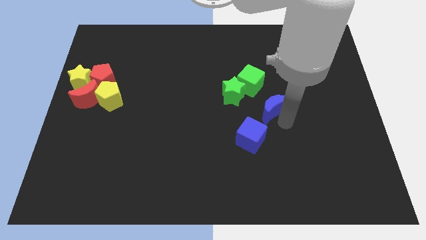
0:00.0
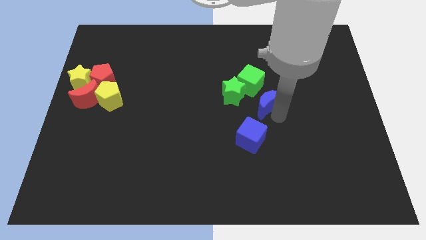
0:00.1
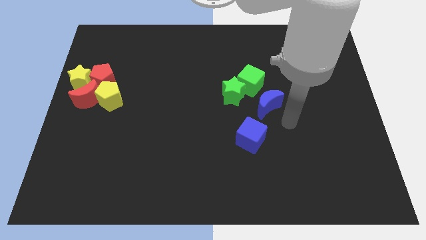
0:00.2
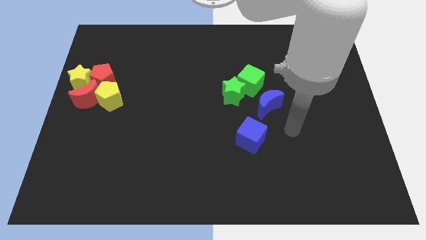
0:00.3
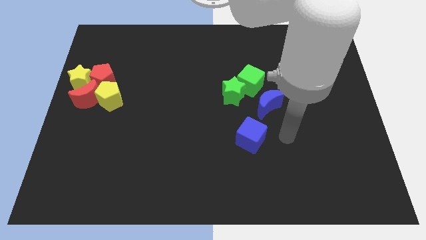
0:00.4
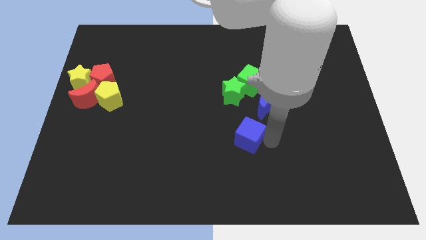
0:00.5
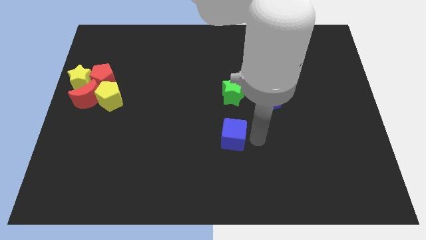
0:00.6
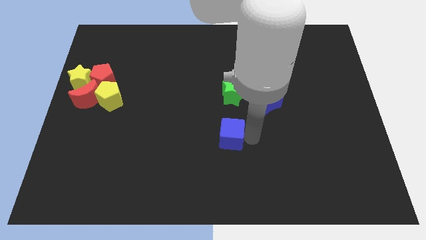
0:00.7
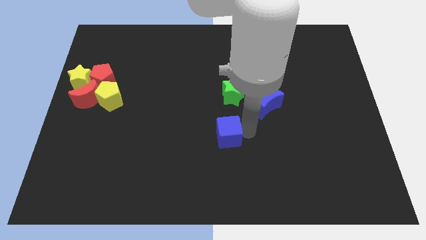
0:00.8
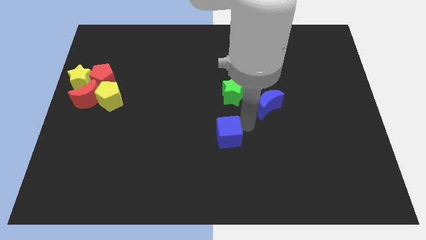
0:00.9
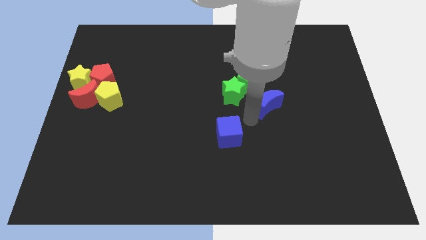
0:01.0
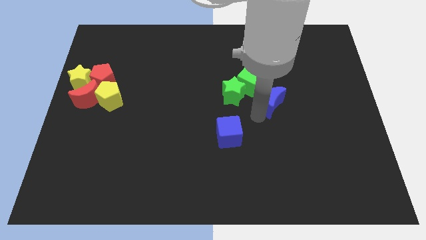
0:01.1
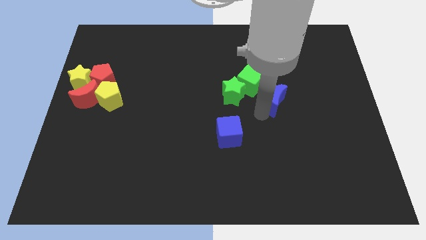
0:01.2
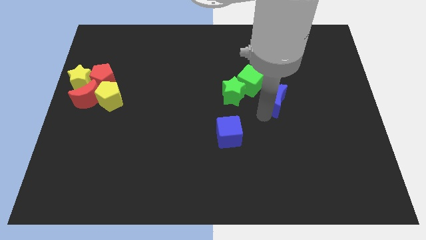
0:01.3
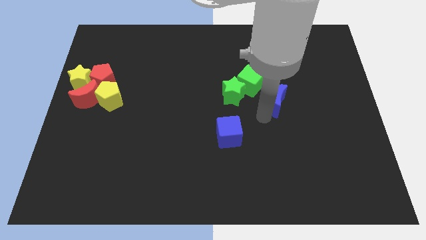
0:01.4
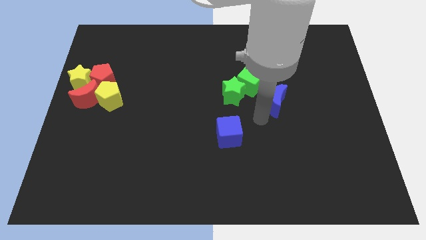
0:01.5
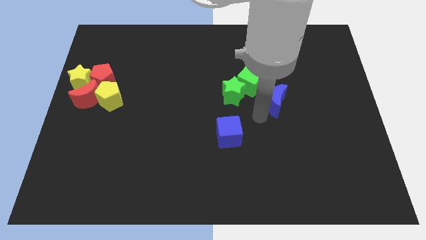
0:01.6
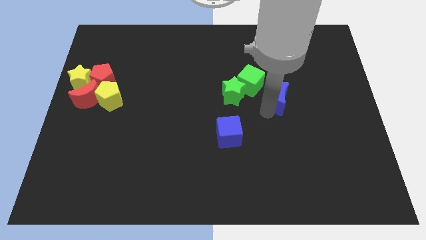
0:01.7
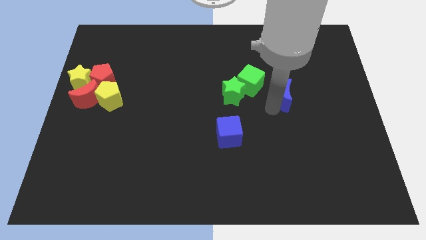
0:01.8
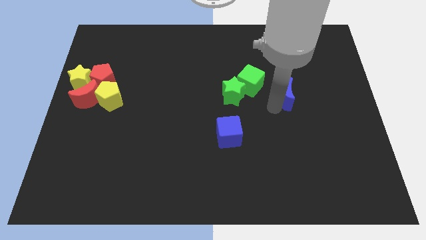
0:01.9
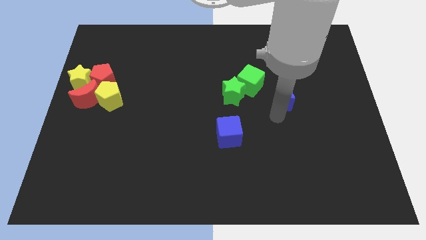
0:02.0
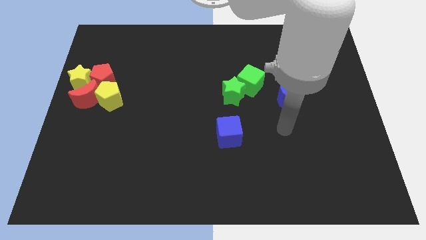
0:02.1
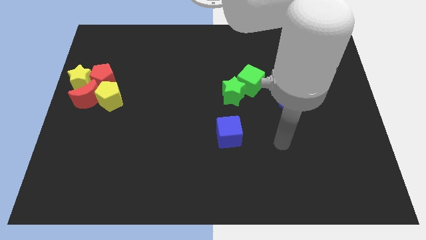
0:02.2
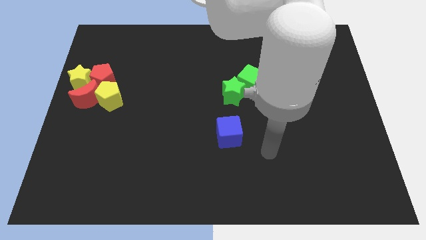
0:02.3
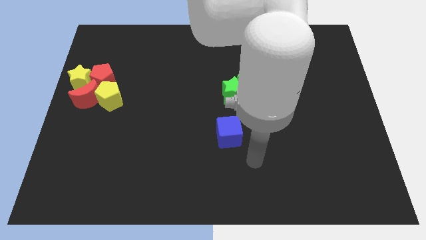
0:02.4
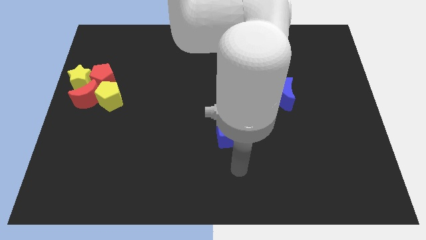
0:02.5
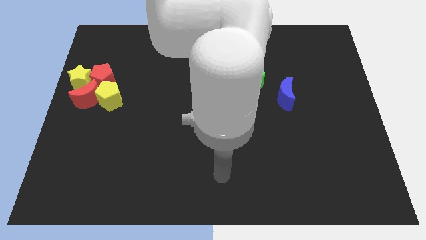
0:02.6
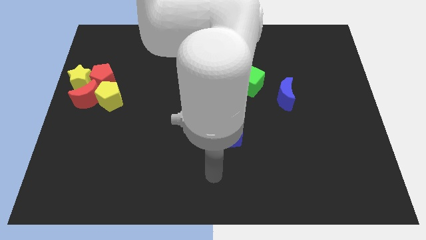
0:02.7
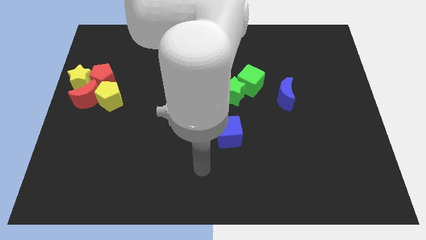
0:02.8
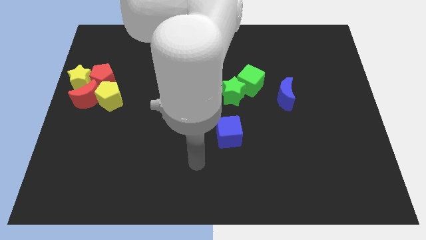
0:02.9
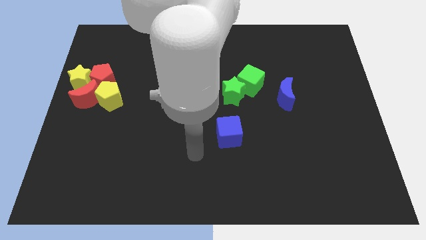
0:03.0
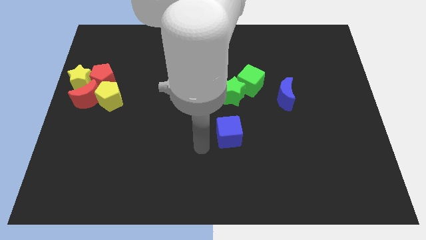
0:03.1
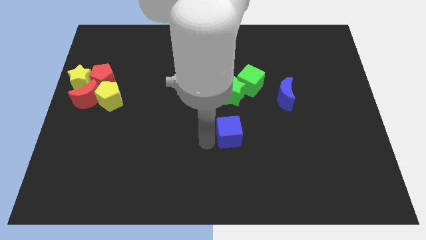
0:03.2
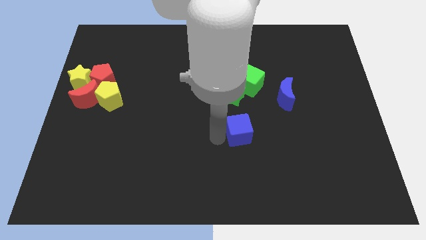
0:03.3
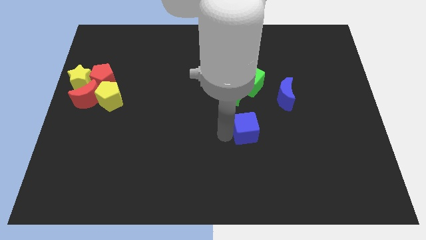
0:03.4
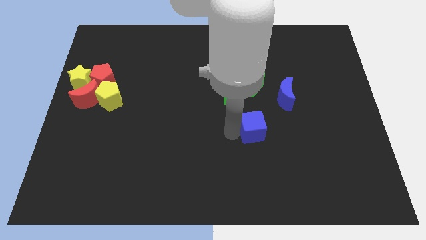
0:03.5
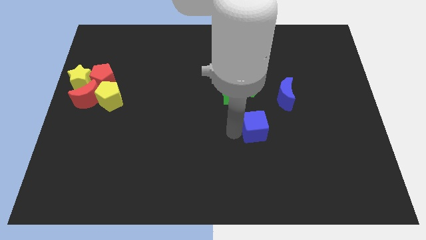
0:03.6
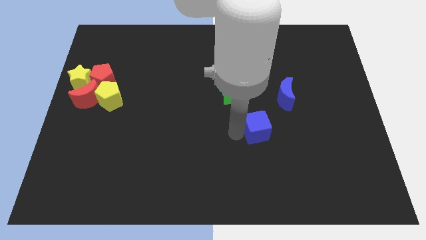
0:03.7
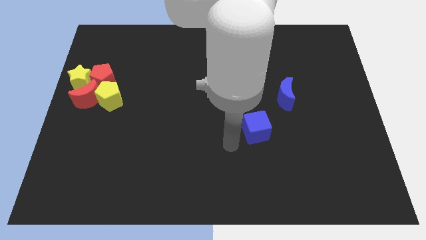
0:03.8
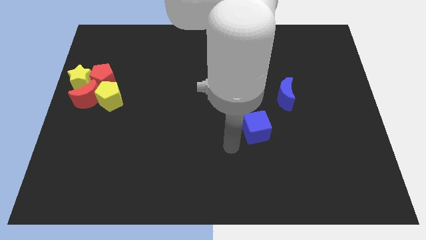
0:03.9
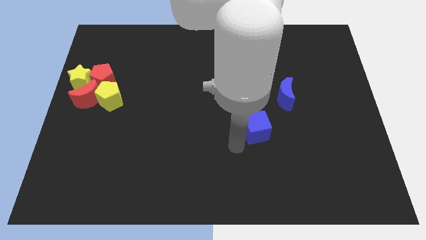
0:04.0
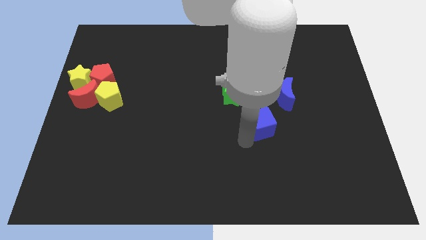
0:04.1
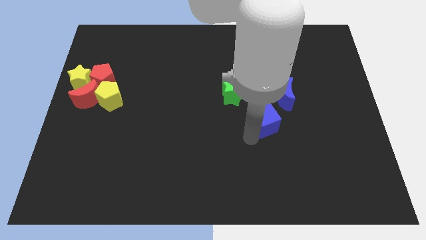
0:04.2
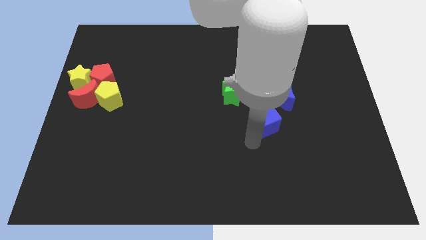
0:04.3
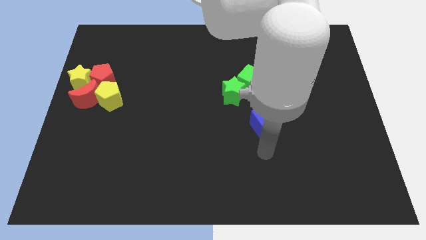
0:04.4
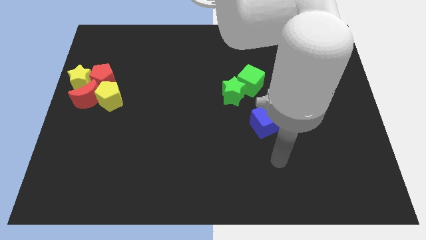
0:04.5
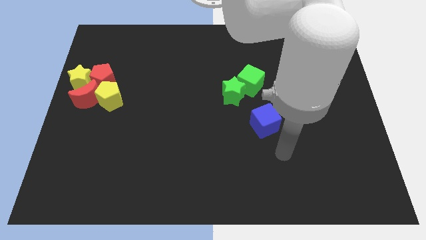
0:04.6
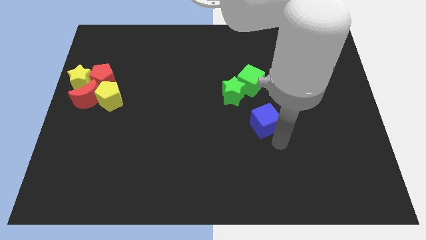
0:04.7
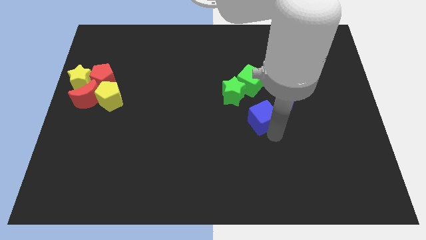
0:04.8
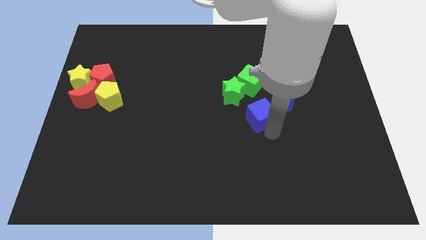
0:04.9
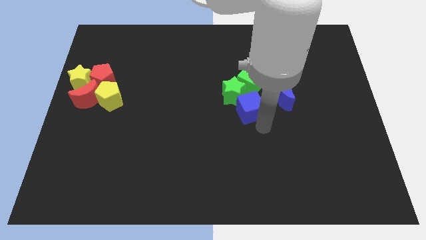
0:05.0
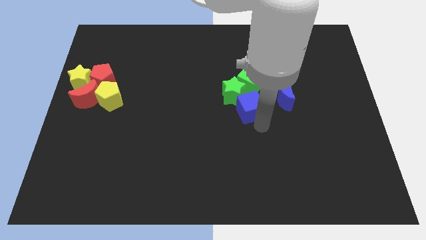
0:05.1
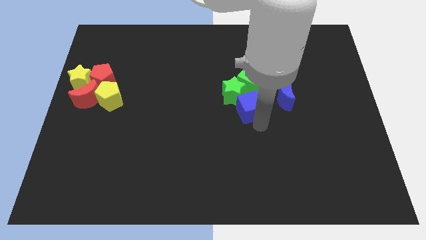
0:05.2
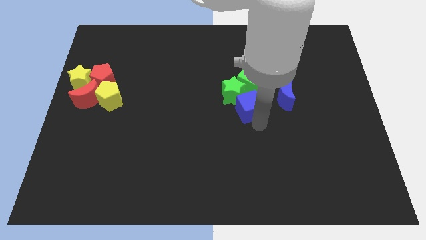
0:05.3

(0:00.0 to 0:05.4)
drag the blue cube into the green star

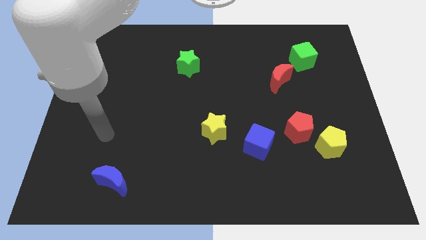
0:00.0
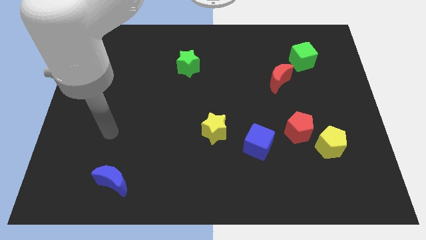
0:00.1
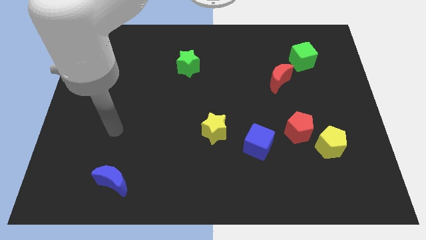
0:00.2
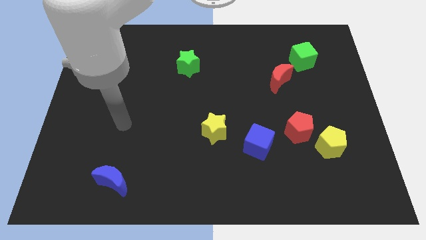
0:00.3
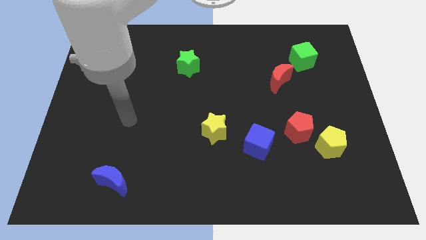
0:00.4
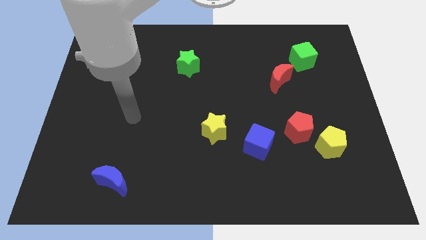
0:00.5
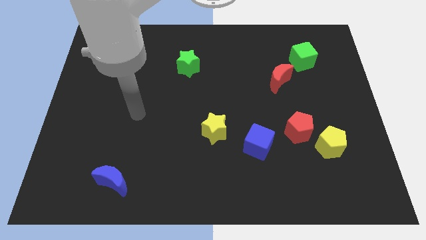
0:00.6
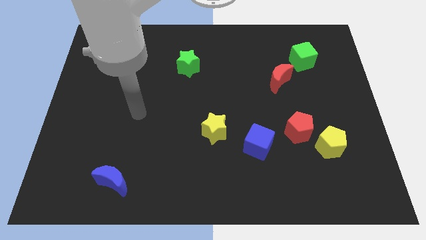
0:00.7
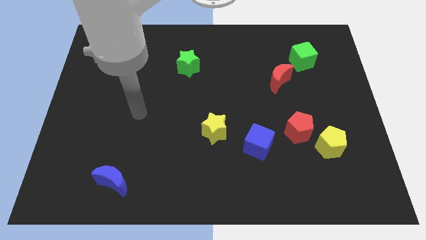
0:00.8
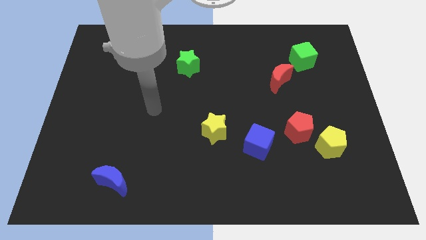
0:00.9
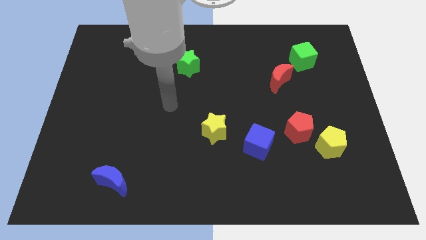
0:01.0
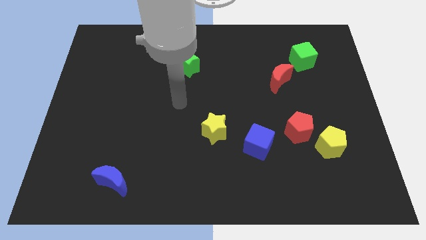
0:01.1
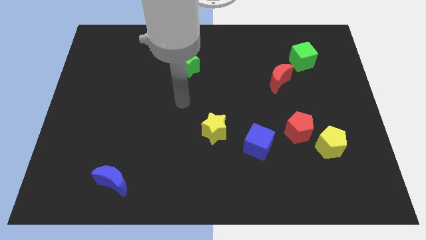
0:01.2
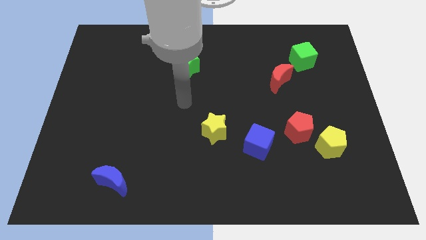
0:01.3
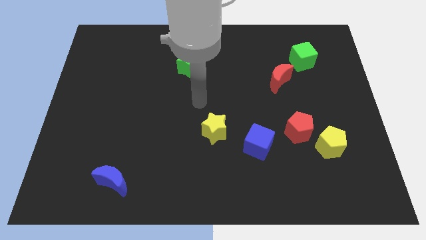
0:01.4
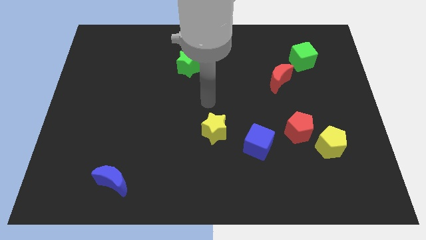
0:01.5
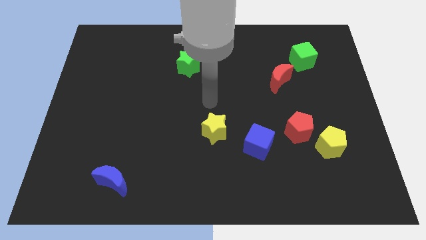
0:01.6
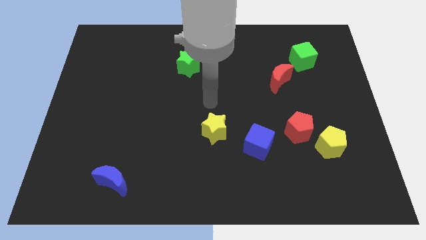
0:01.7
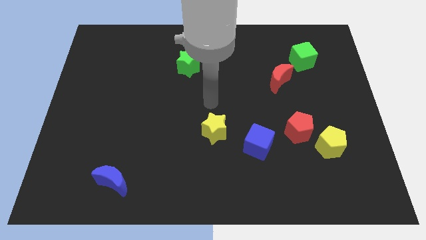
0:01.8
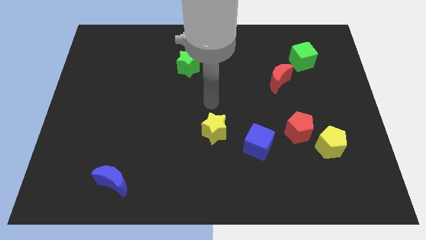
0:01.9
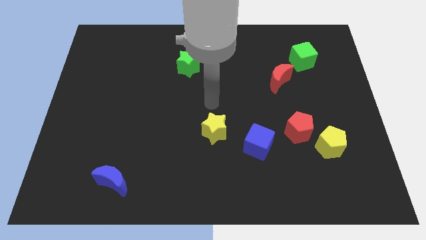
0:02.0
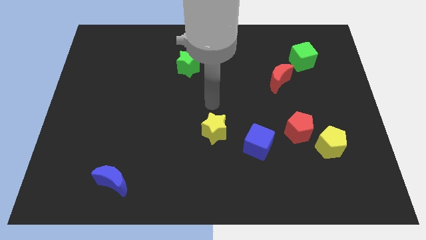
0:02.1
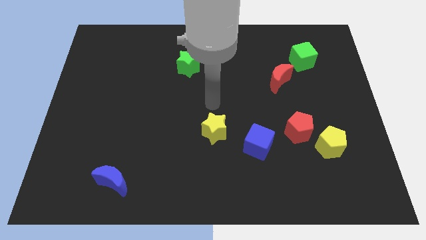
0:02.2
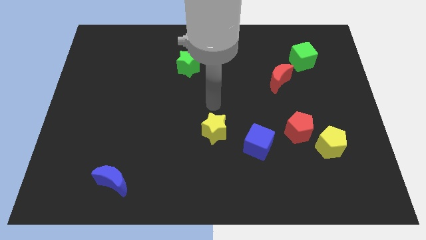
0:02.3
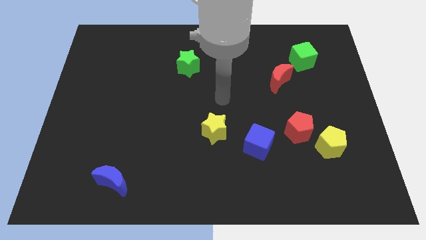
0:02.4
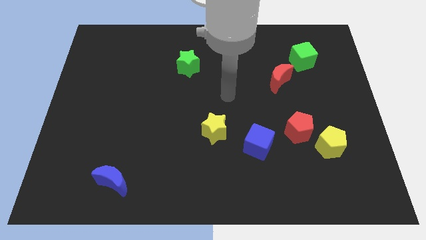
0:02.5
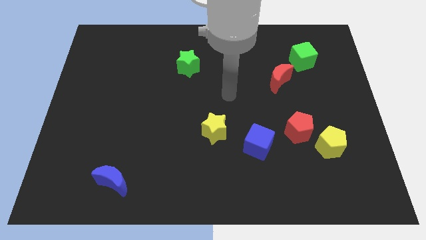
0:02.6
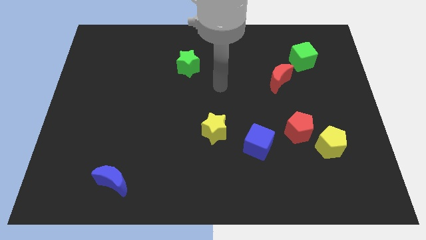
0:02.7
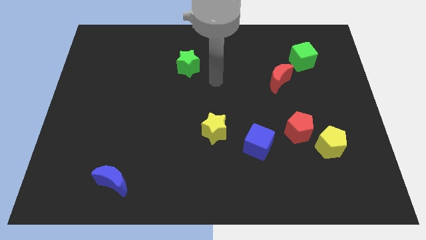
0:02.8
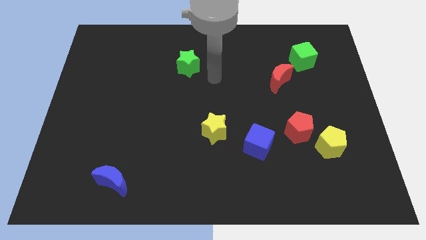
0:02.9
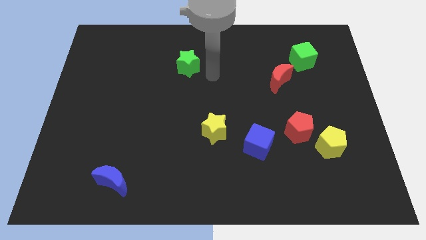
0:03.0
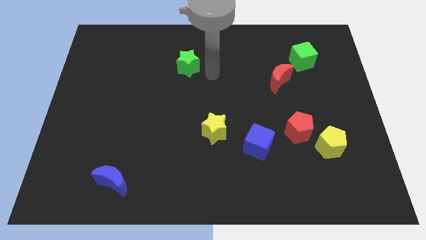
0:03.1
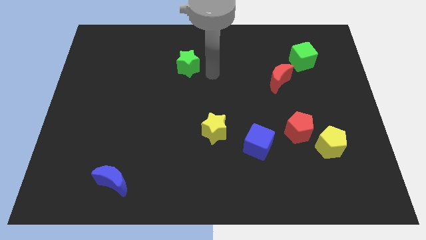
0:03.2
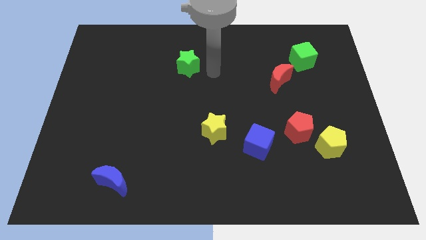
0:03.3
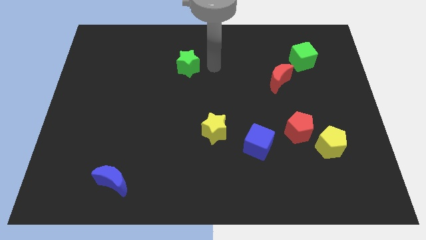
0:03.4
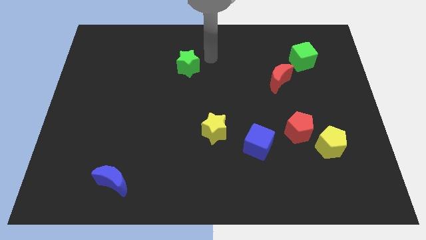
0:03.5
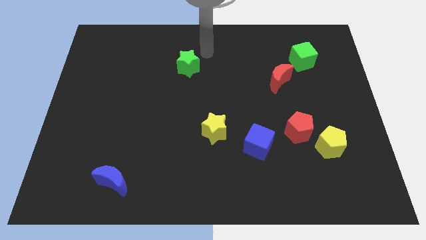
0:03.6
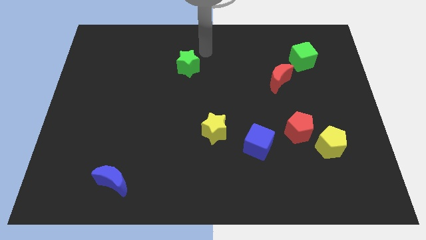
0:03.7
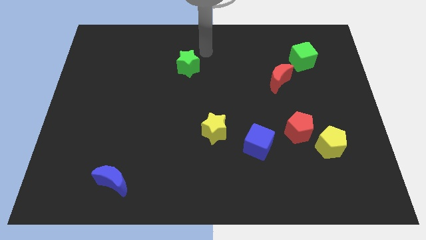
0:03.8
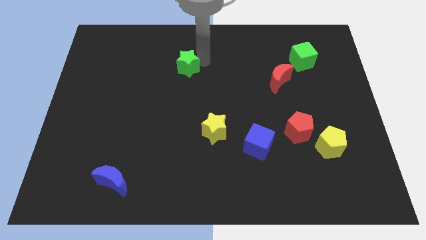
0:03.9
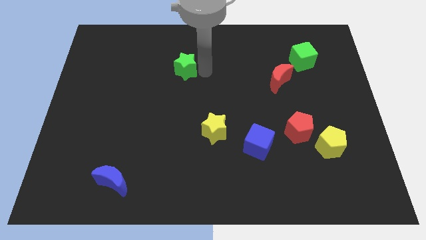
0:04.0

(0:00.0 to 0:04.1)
touch the green star
